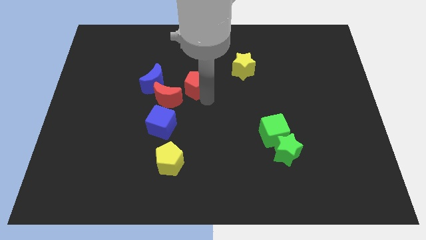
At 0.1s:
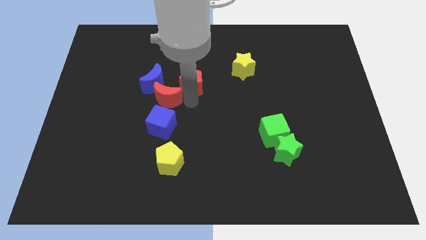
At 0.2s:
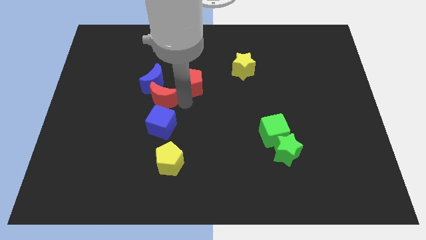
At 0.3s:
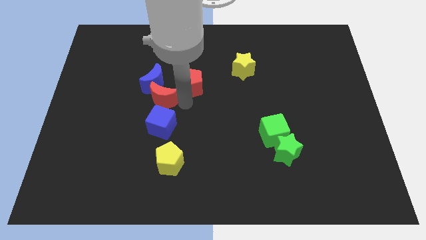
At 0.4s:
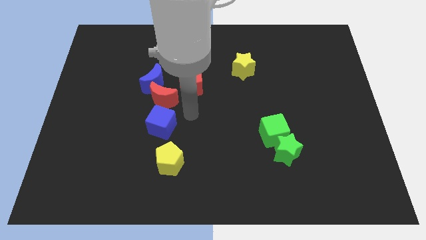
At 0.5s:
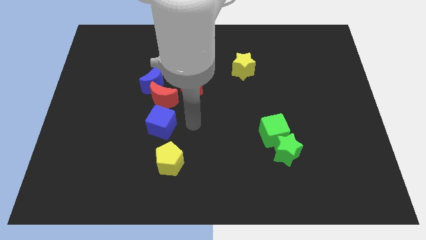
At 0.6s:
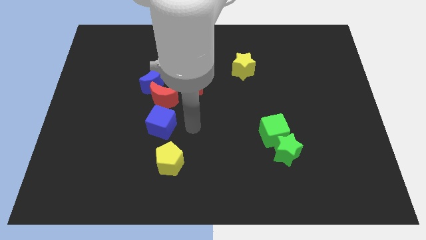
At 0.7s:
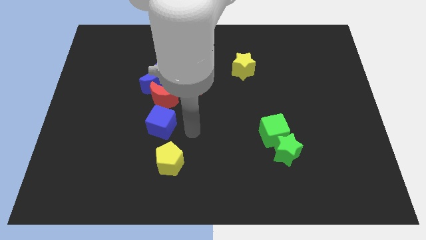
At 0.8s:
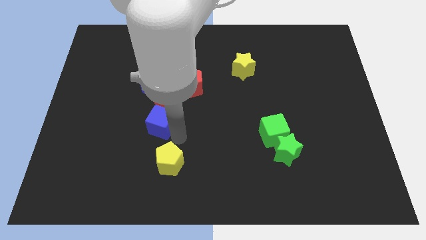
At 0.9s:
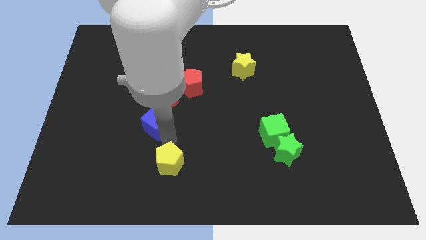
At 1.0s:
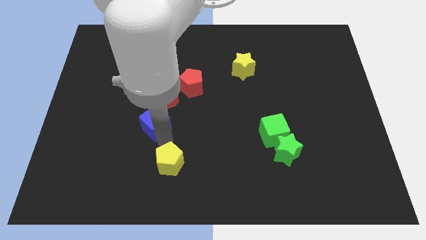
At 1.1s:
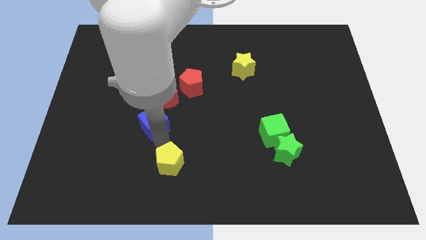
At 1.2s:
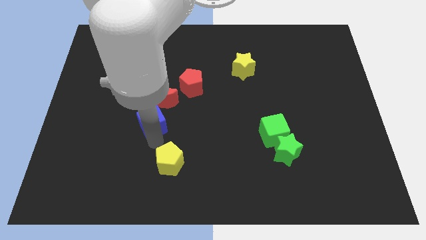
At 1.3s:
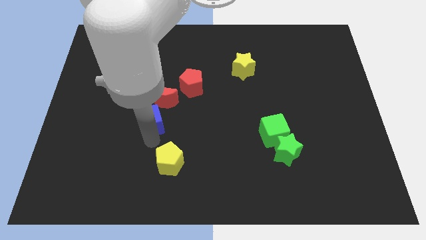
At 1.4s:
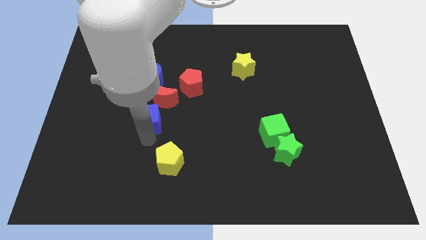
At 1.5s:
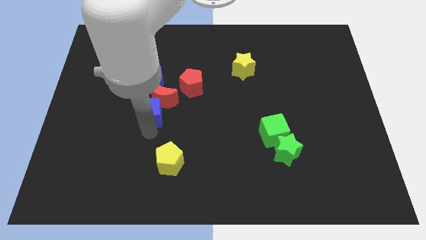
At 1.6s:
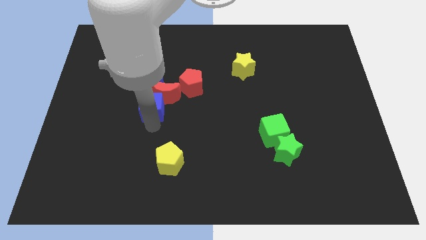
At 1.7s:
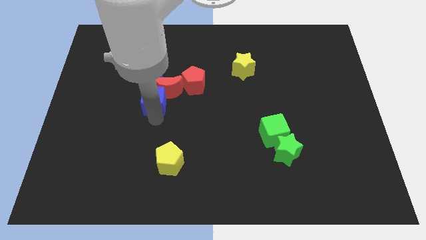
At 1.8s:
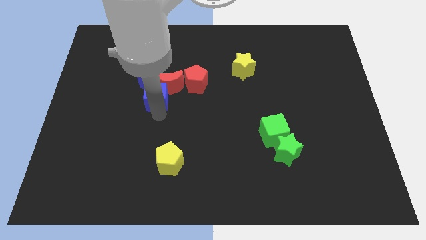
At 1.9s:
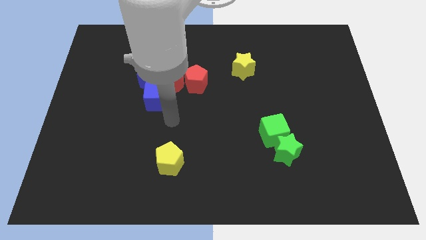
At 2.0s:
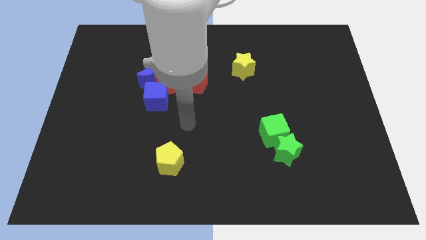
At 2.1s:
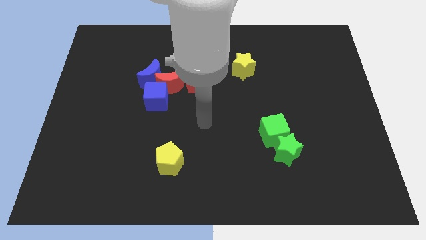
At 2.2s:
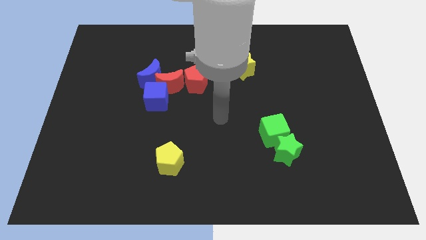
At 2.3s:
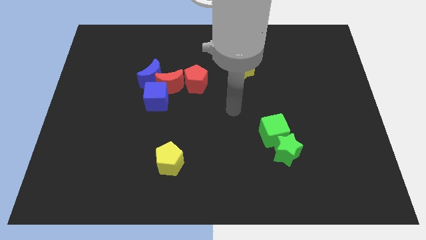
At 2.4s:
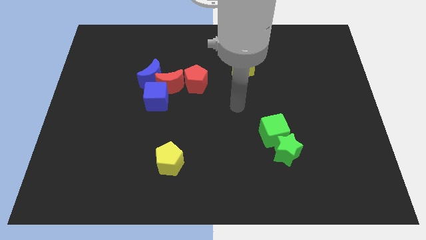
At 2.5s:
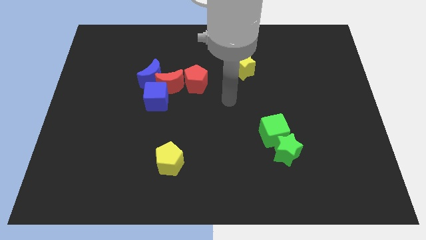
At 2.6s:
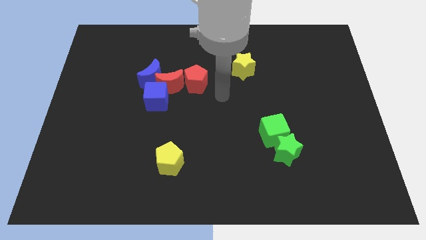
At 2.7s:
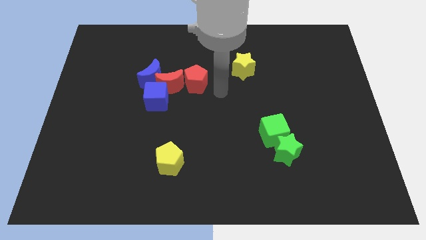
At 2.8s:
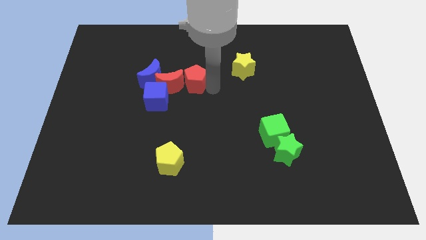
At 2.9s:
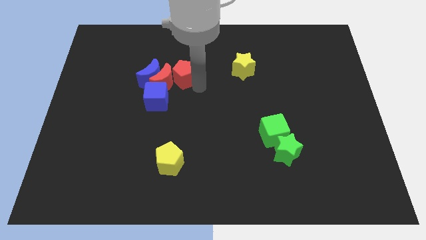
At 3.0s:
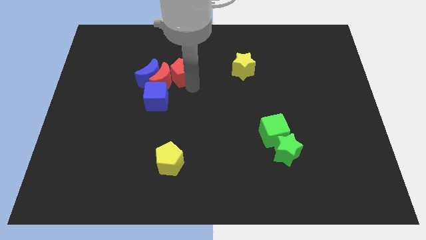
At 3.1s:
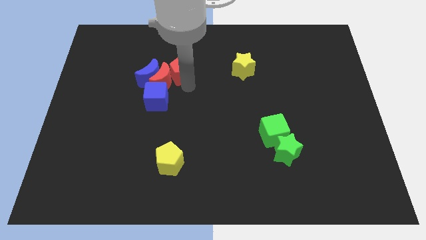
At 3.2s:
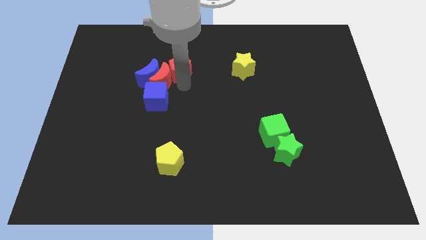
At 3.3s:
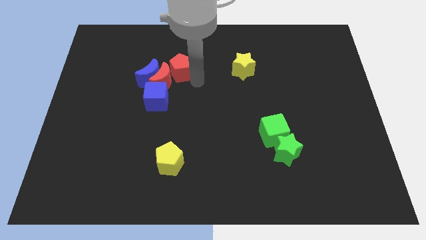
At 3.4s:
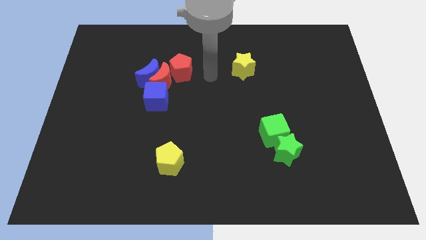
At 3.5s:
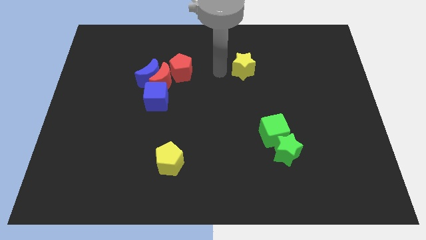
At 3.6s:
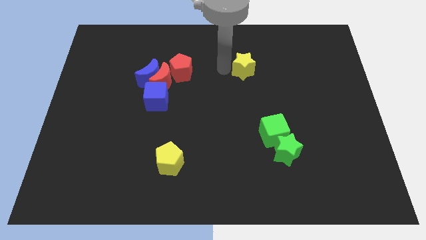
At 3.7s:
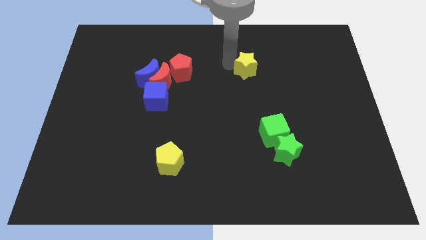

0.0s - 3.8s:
push a group of blocks upward

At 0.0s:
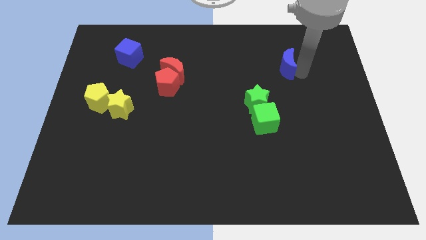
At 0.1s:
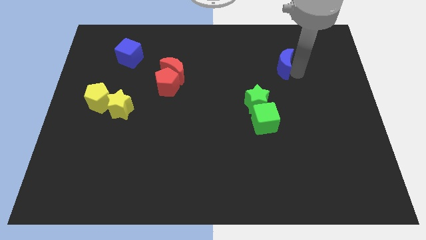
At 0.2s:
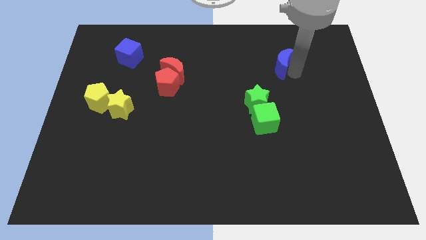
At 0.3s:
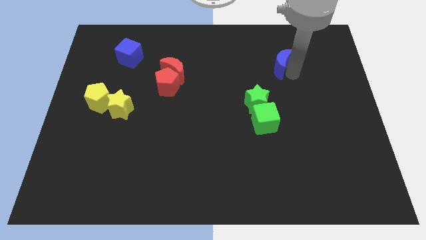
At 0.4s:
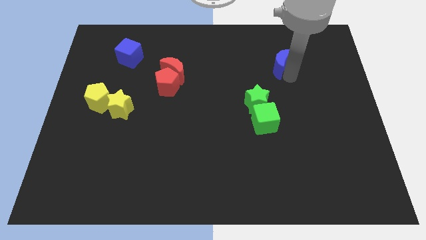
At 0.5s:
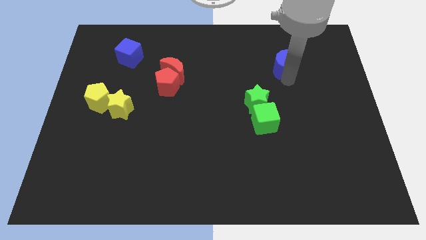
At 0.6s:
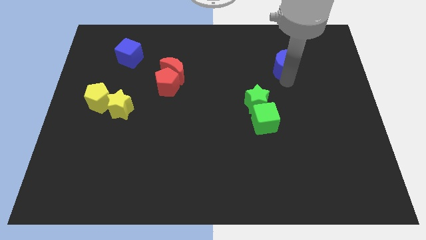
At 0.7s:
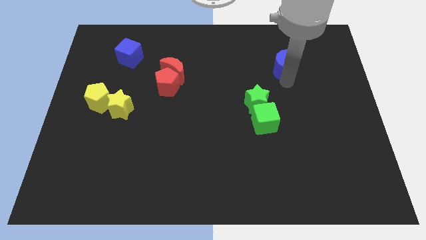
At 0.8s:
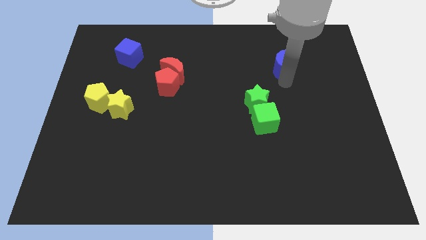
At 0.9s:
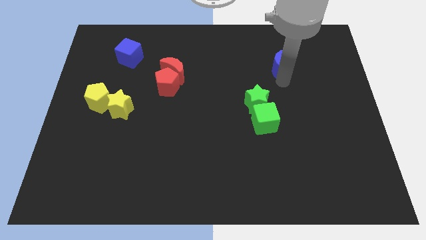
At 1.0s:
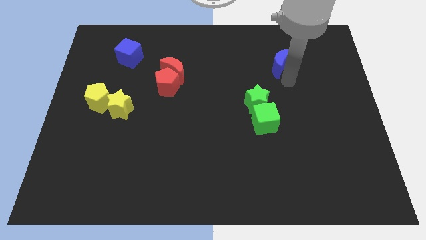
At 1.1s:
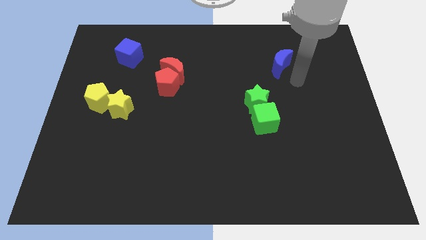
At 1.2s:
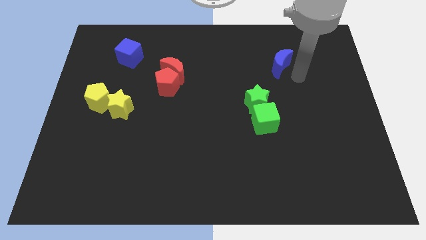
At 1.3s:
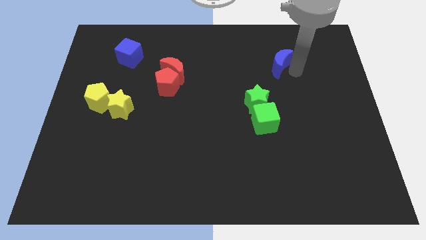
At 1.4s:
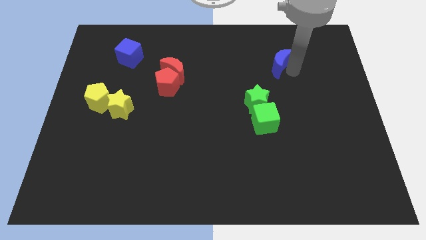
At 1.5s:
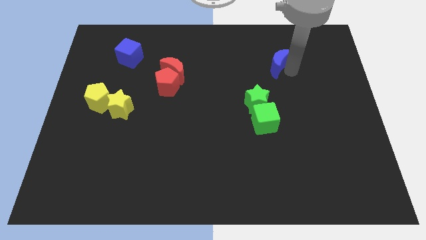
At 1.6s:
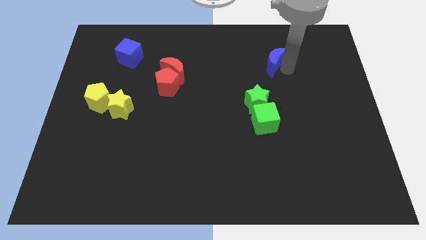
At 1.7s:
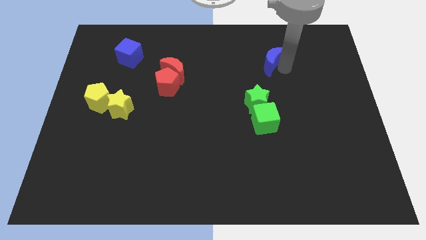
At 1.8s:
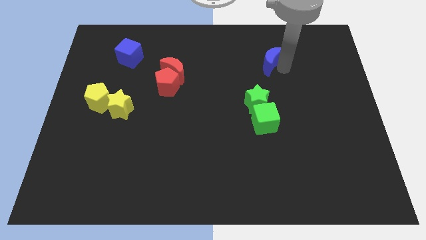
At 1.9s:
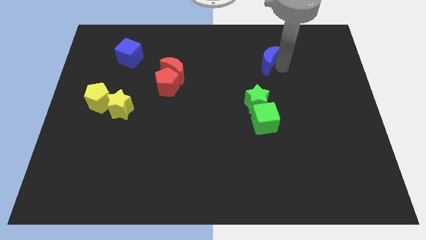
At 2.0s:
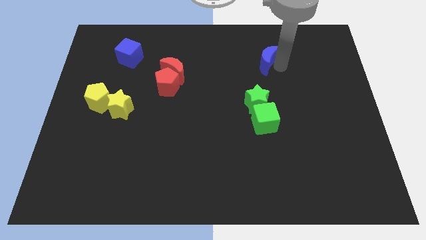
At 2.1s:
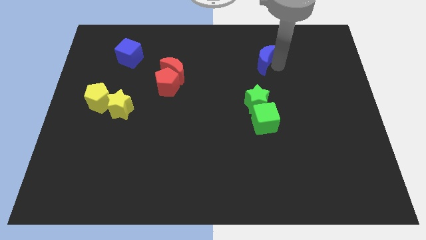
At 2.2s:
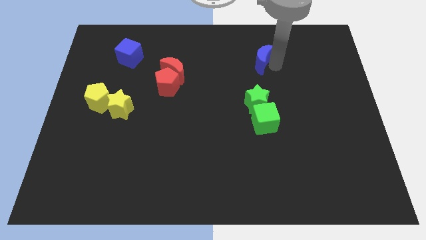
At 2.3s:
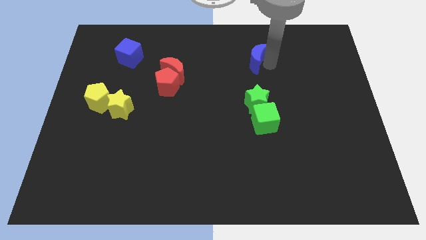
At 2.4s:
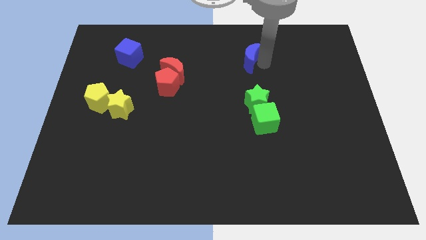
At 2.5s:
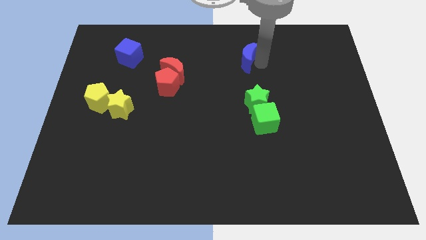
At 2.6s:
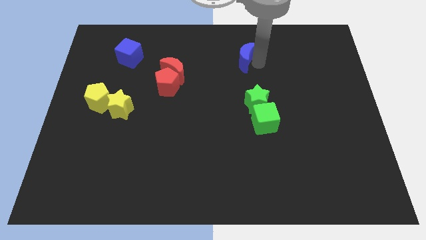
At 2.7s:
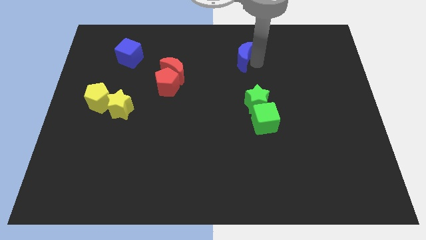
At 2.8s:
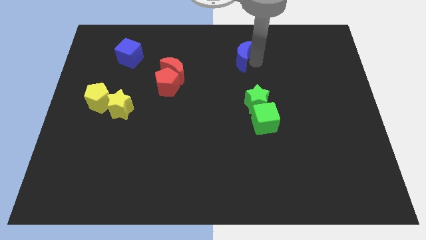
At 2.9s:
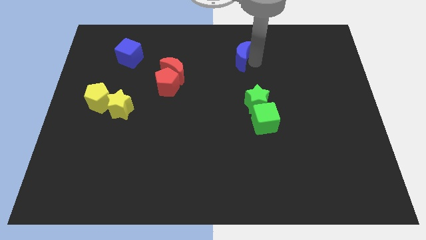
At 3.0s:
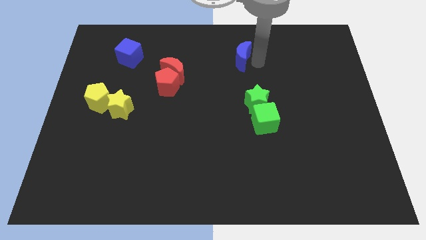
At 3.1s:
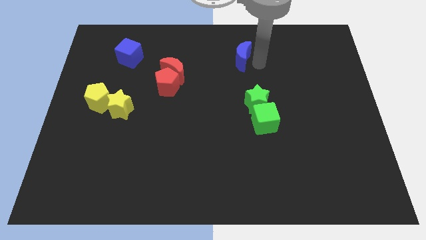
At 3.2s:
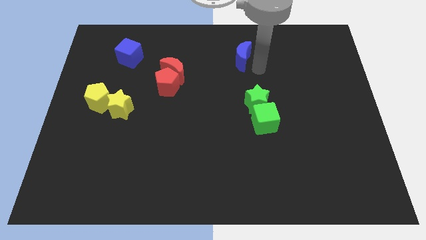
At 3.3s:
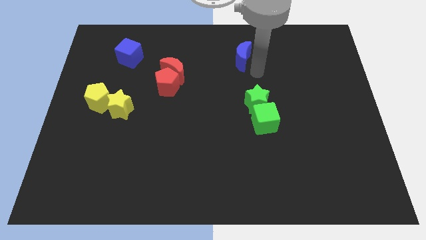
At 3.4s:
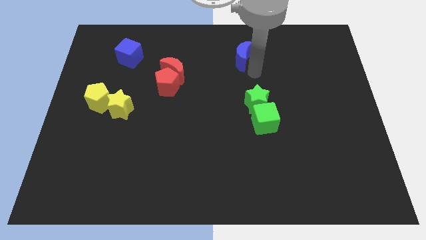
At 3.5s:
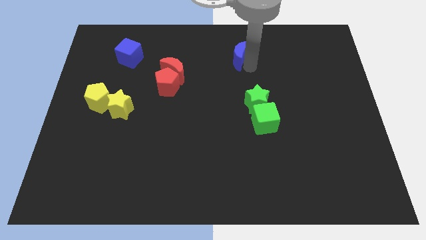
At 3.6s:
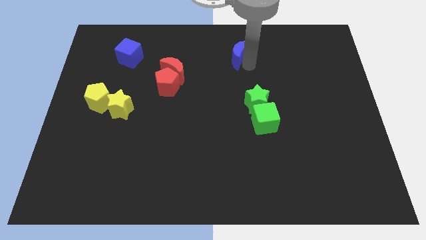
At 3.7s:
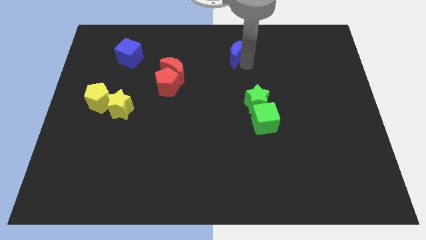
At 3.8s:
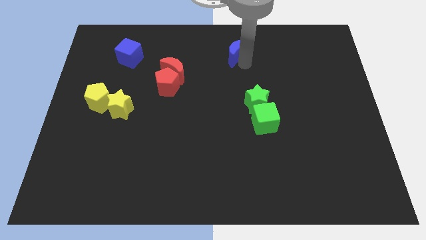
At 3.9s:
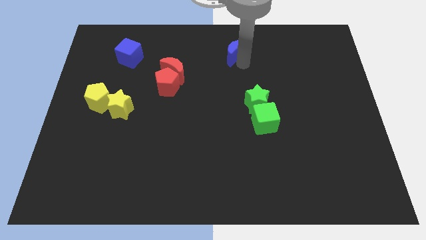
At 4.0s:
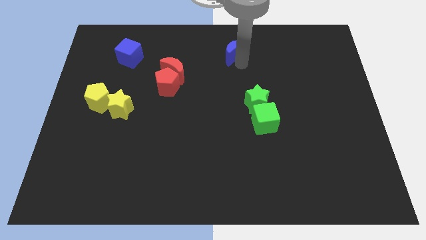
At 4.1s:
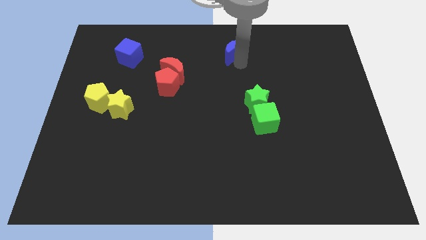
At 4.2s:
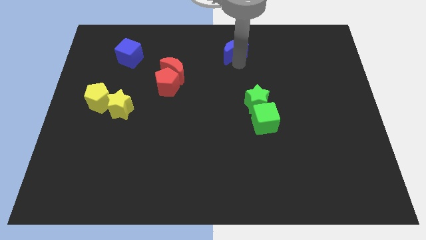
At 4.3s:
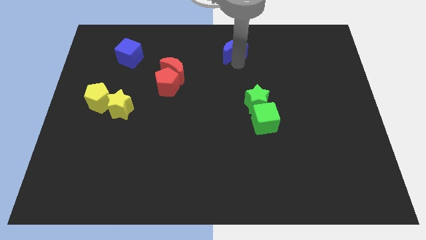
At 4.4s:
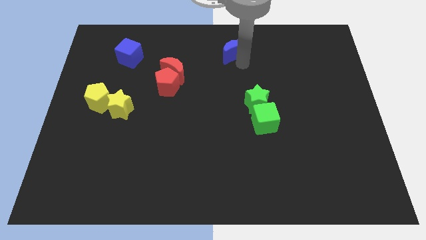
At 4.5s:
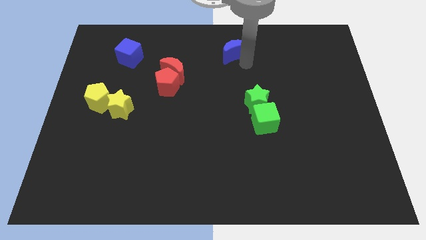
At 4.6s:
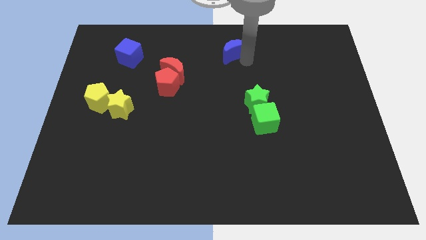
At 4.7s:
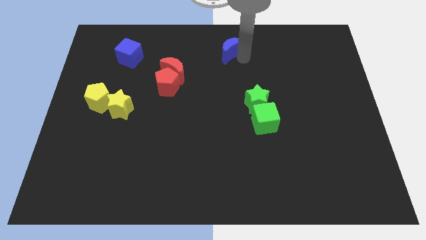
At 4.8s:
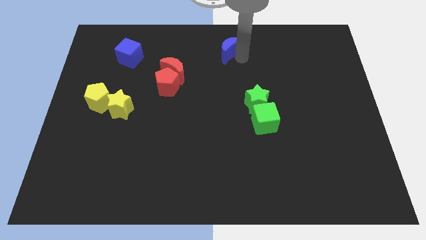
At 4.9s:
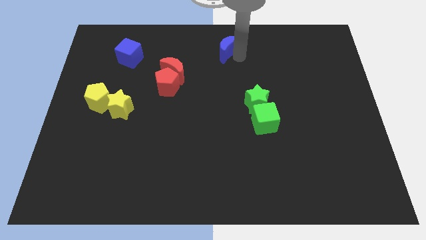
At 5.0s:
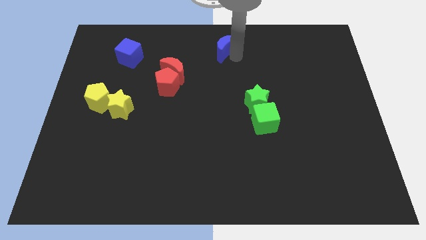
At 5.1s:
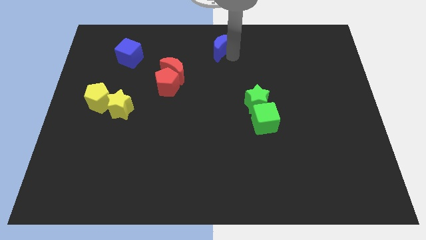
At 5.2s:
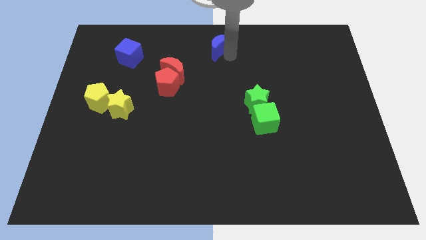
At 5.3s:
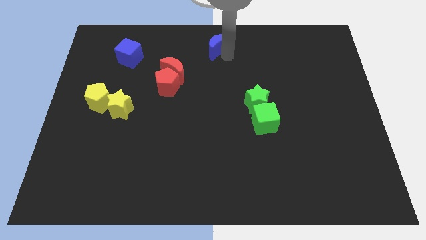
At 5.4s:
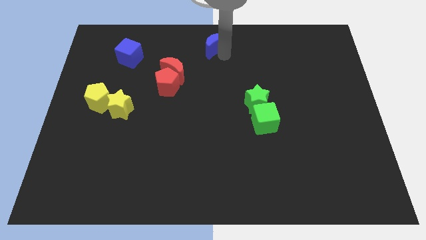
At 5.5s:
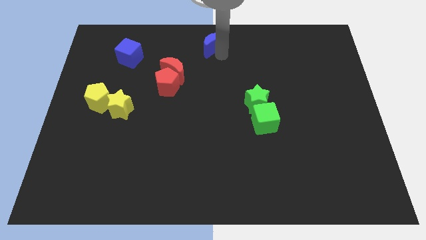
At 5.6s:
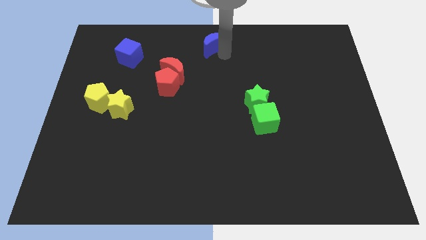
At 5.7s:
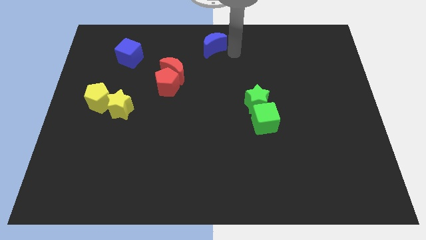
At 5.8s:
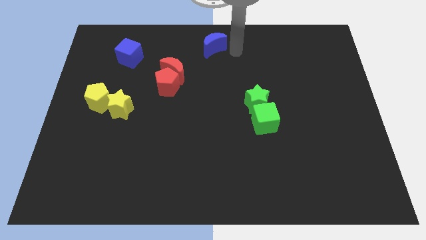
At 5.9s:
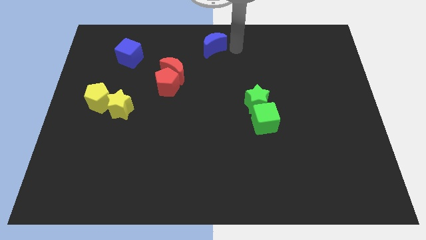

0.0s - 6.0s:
move the blue crescent to the top center of the board
